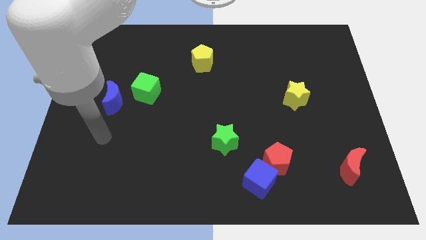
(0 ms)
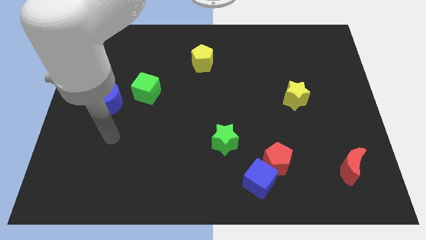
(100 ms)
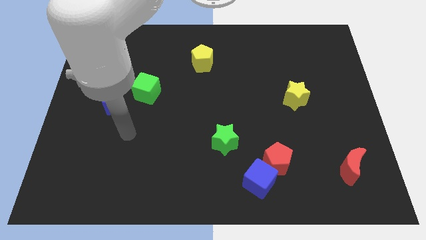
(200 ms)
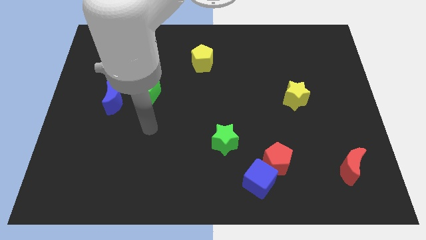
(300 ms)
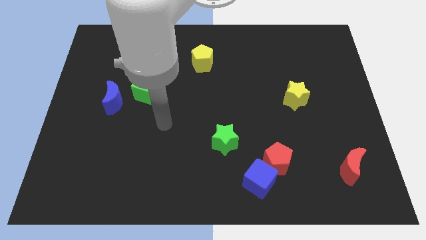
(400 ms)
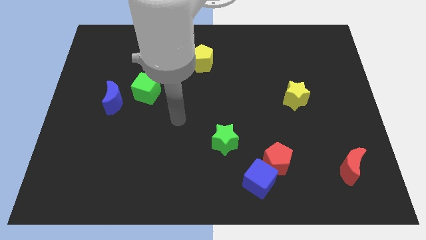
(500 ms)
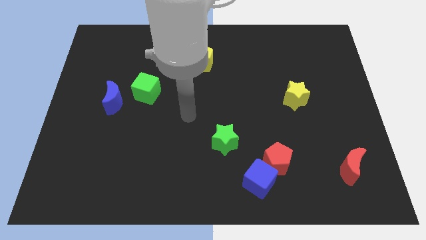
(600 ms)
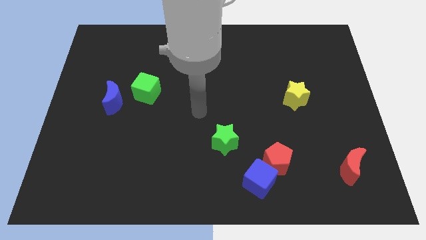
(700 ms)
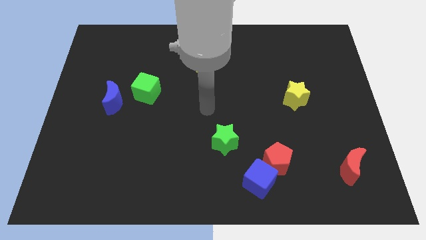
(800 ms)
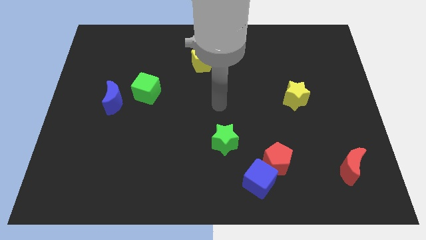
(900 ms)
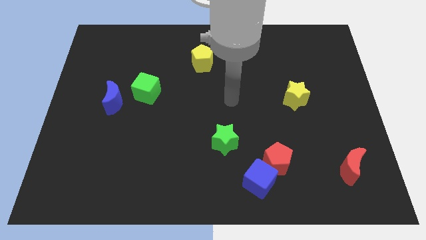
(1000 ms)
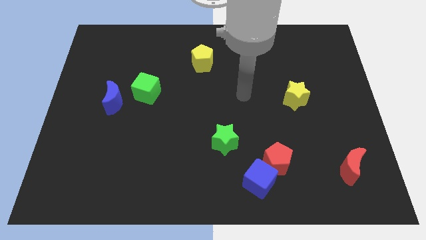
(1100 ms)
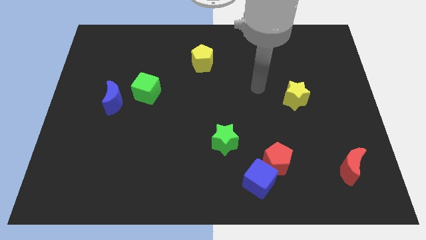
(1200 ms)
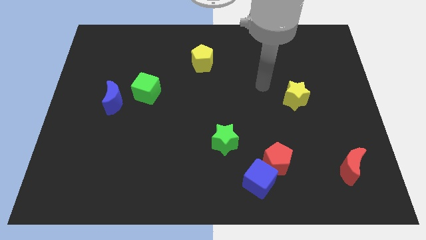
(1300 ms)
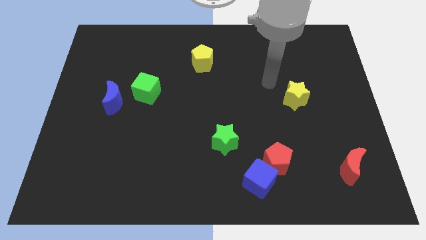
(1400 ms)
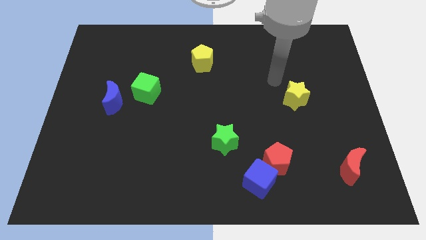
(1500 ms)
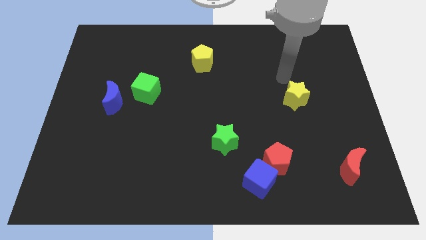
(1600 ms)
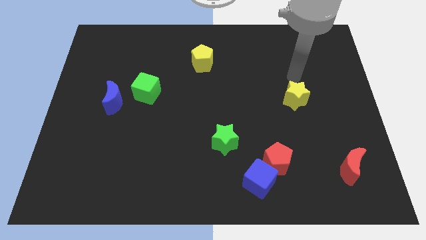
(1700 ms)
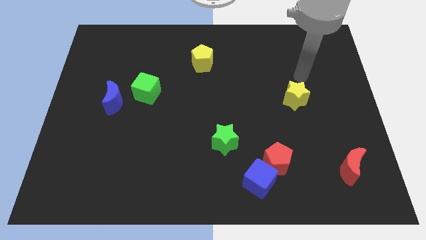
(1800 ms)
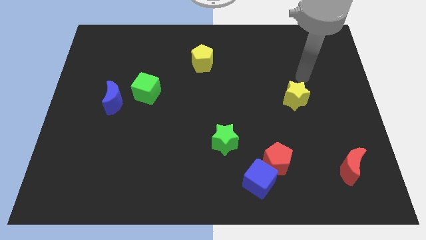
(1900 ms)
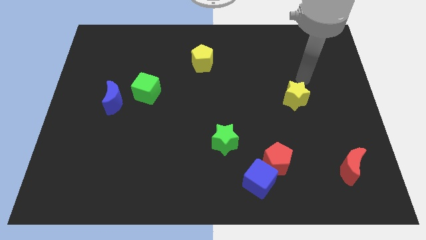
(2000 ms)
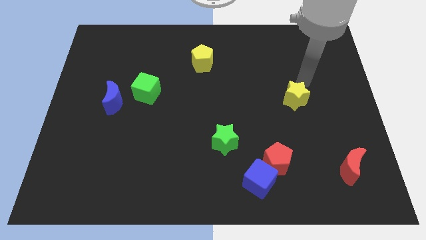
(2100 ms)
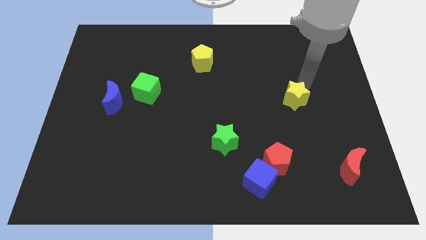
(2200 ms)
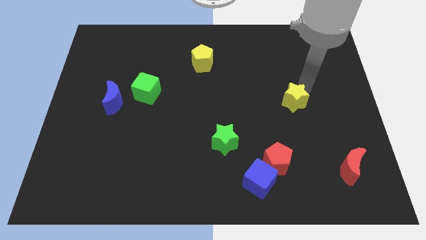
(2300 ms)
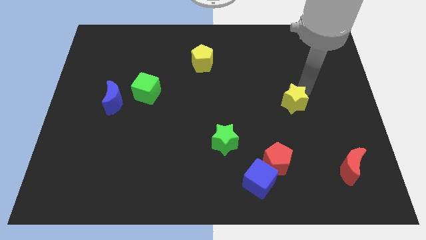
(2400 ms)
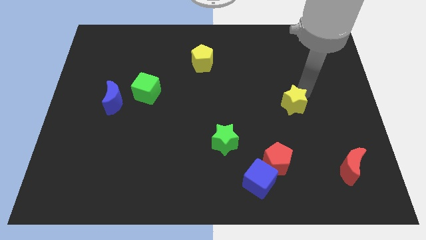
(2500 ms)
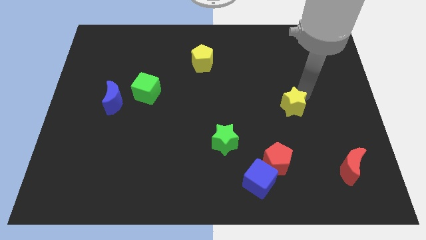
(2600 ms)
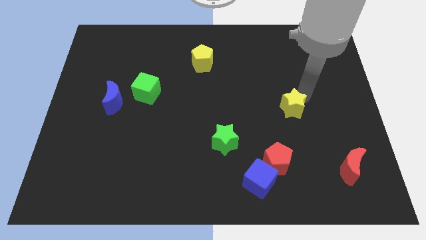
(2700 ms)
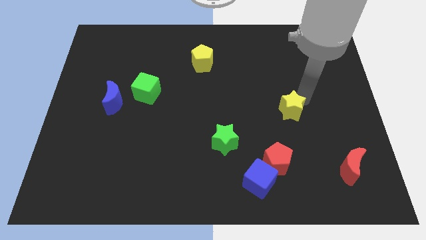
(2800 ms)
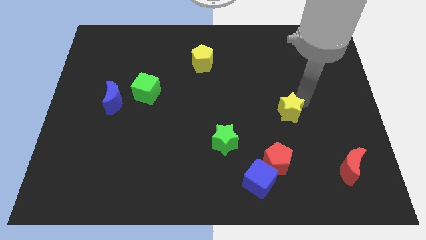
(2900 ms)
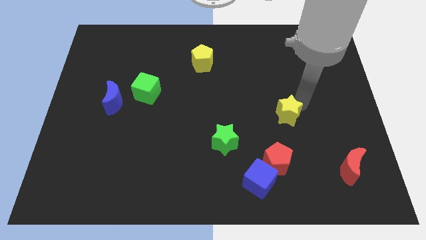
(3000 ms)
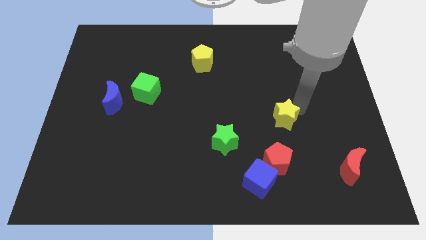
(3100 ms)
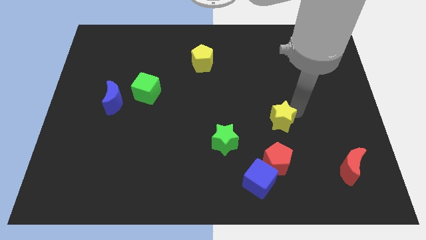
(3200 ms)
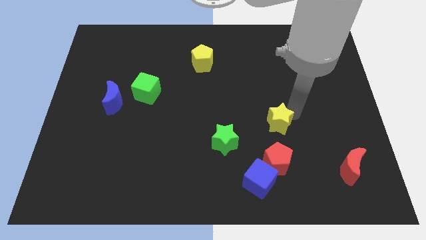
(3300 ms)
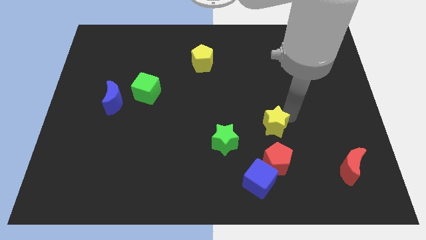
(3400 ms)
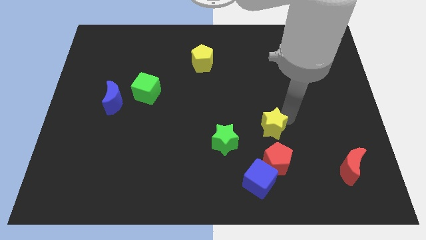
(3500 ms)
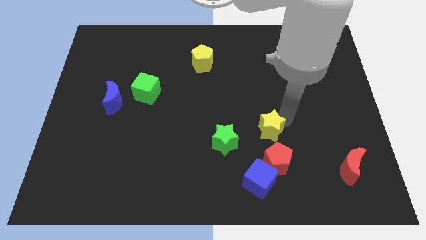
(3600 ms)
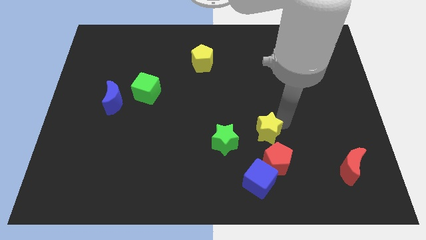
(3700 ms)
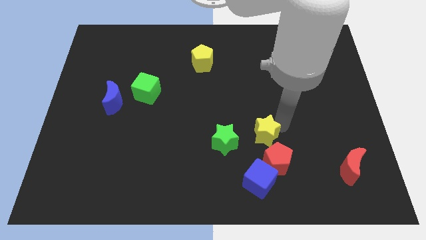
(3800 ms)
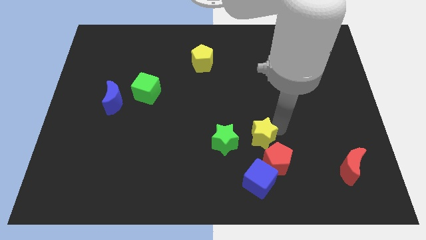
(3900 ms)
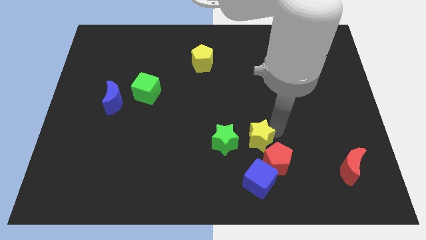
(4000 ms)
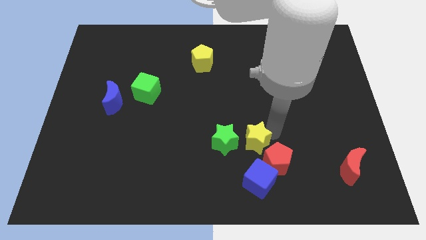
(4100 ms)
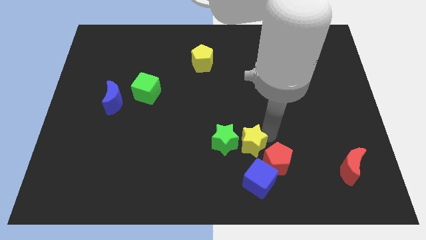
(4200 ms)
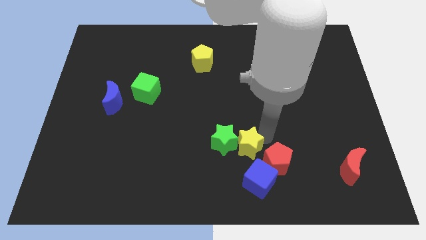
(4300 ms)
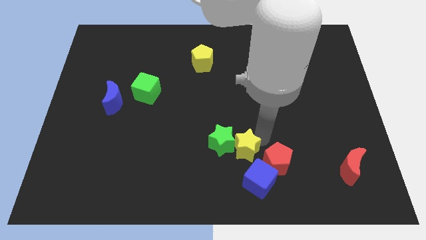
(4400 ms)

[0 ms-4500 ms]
put the yellow star next to the green star

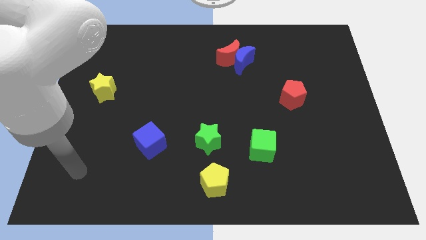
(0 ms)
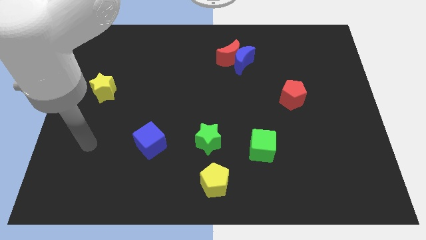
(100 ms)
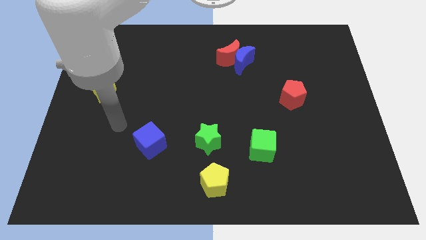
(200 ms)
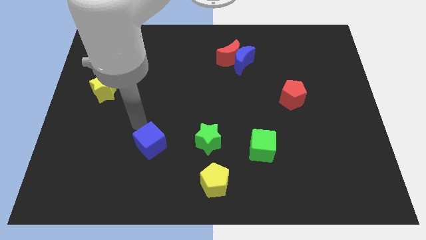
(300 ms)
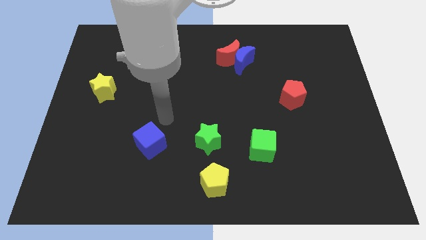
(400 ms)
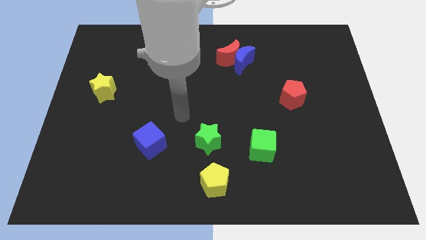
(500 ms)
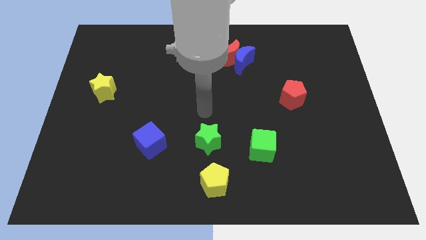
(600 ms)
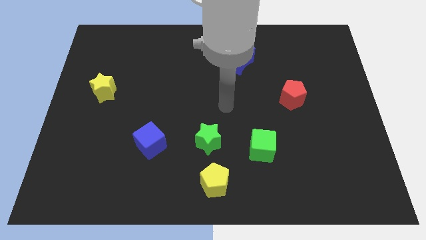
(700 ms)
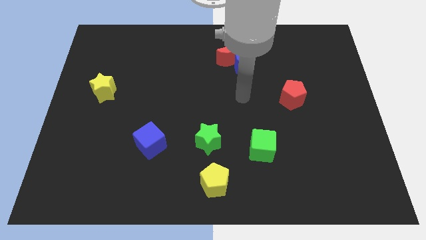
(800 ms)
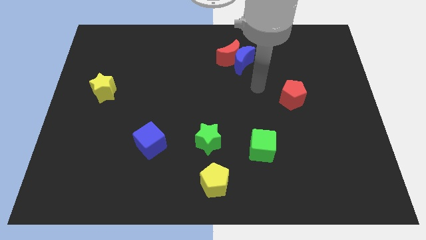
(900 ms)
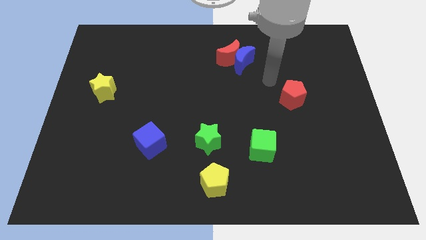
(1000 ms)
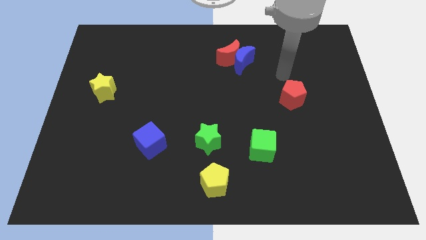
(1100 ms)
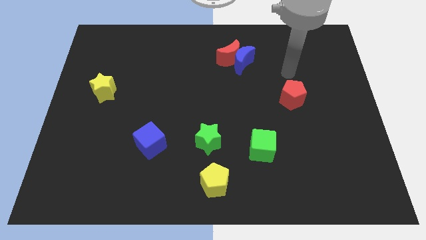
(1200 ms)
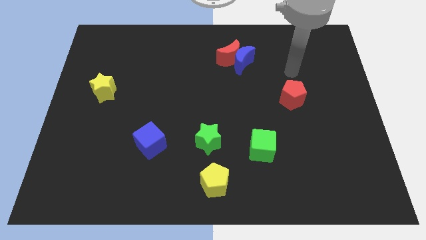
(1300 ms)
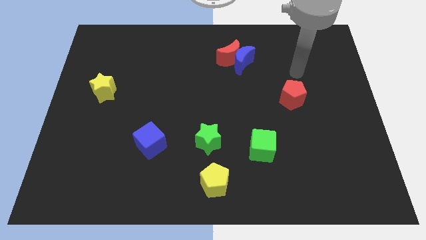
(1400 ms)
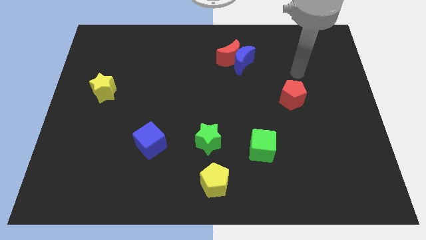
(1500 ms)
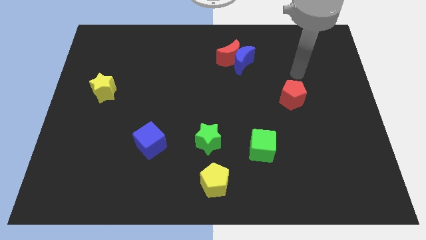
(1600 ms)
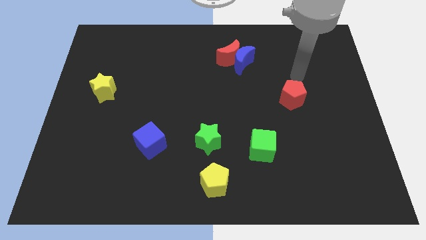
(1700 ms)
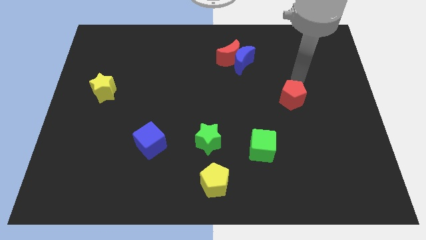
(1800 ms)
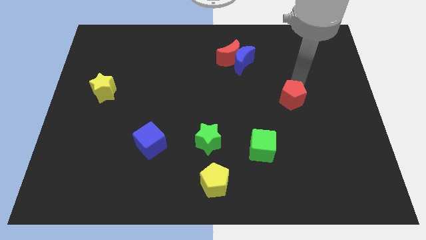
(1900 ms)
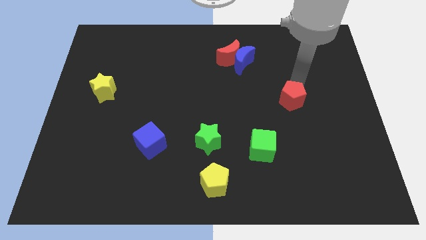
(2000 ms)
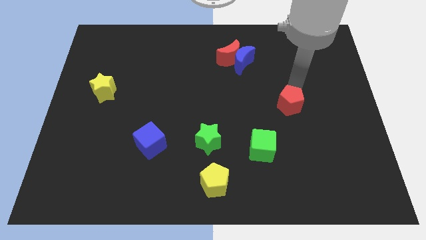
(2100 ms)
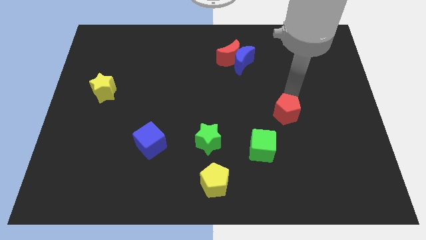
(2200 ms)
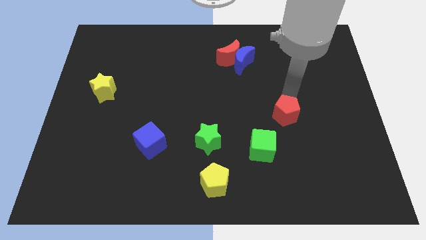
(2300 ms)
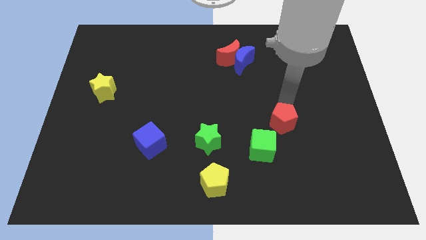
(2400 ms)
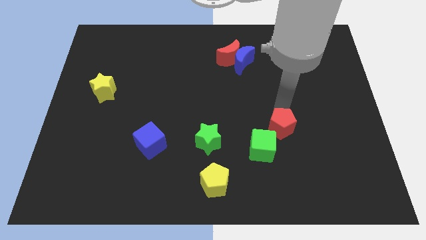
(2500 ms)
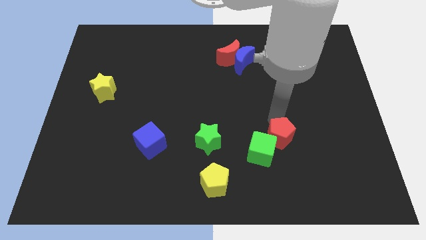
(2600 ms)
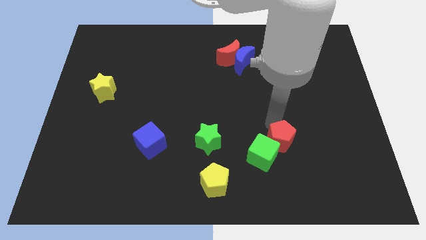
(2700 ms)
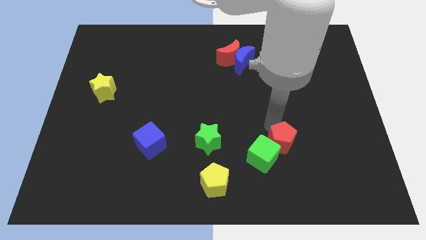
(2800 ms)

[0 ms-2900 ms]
put the red pentagon towards the green cube

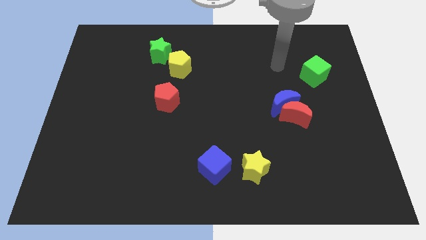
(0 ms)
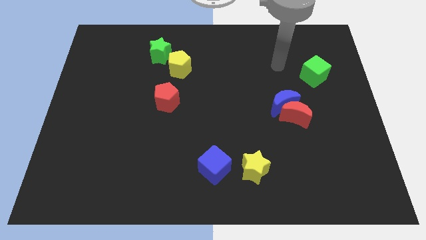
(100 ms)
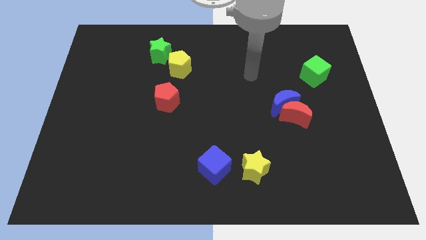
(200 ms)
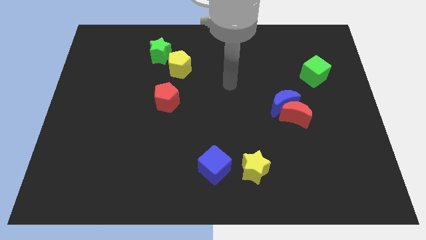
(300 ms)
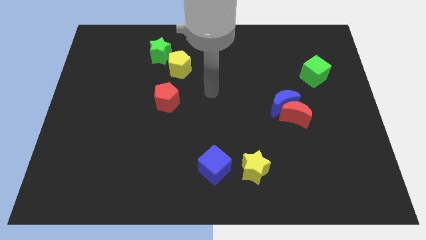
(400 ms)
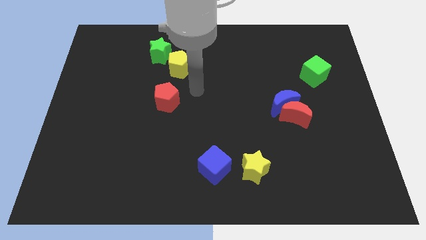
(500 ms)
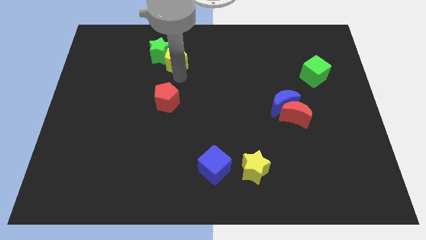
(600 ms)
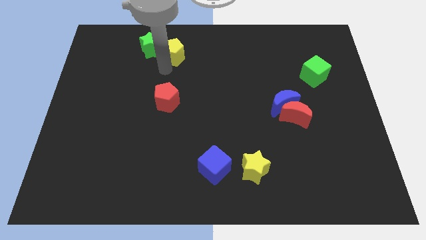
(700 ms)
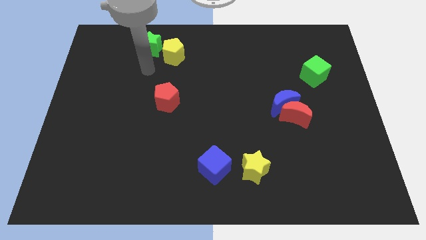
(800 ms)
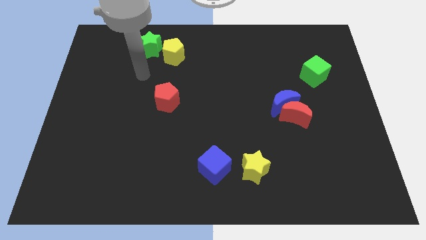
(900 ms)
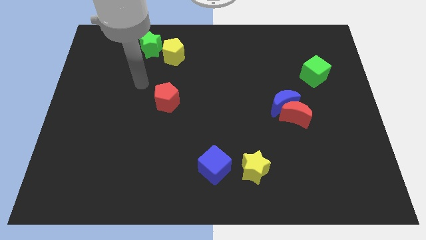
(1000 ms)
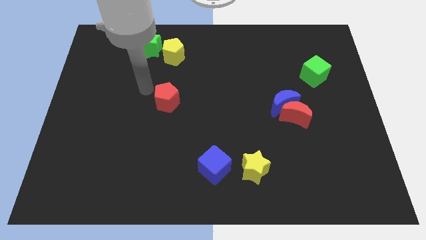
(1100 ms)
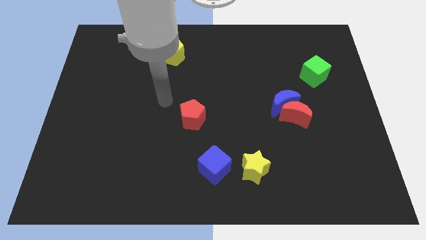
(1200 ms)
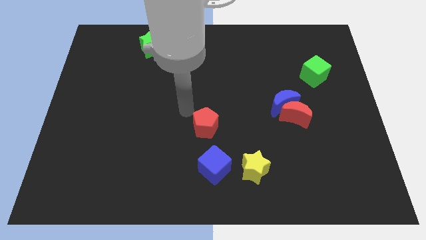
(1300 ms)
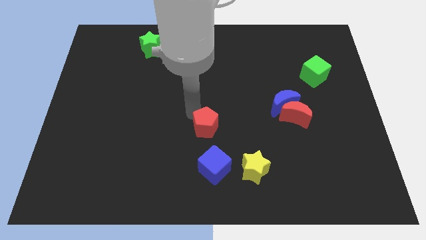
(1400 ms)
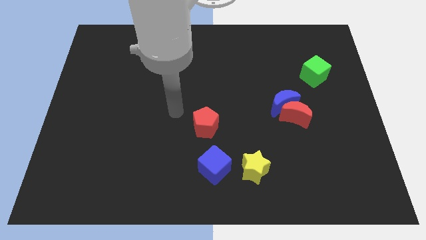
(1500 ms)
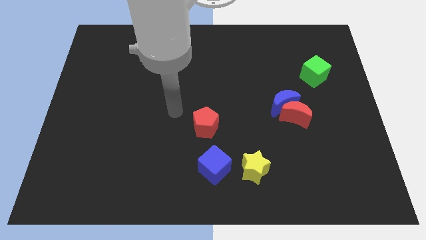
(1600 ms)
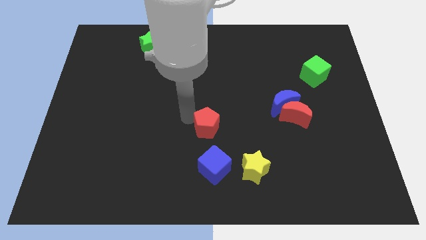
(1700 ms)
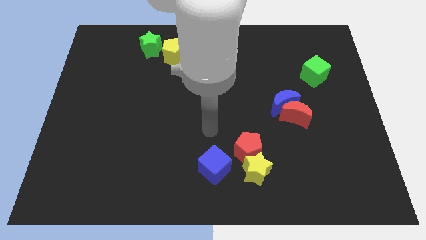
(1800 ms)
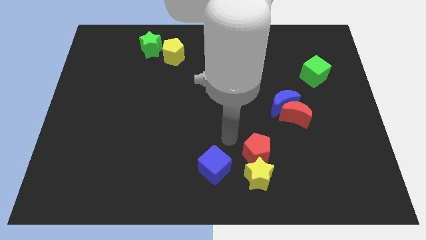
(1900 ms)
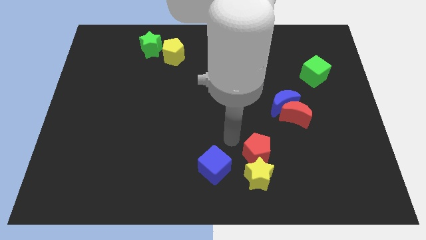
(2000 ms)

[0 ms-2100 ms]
move the red pentagon towards the yellow star
